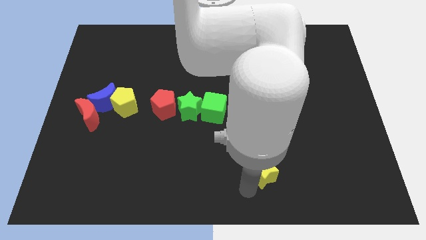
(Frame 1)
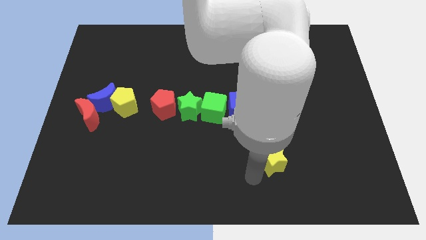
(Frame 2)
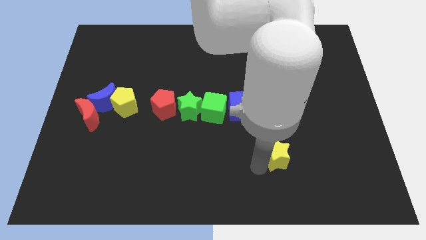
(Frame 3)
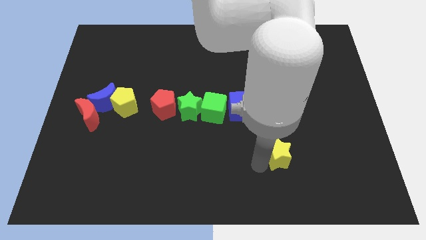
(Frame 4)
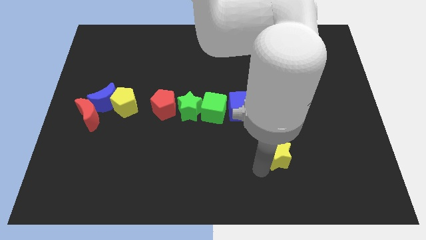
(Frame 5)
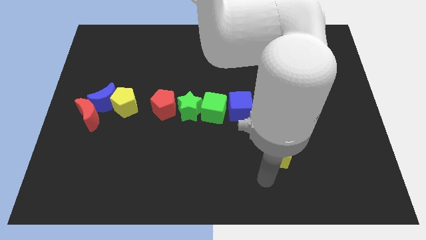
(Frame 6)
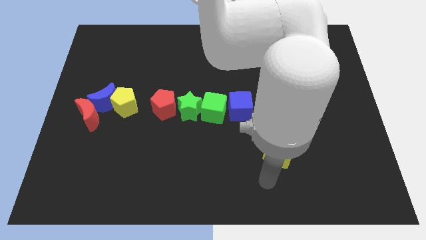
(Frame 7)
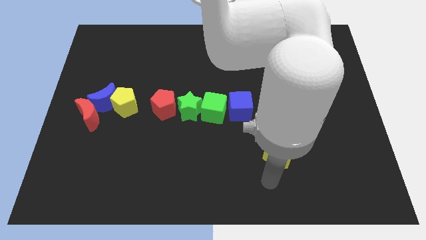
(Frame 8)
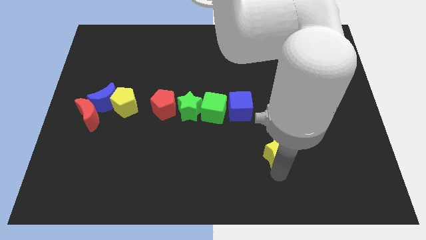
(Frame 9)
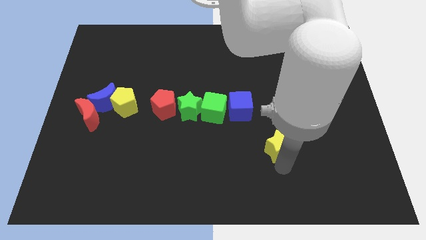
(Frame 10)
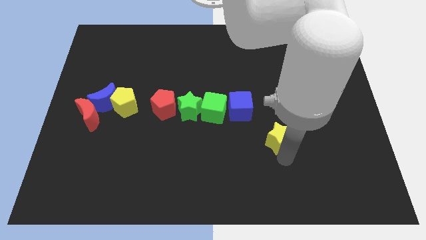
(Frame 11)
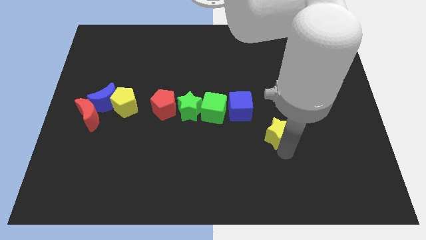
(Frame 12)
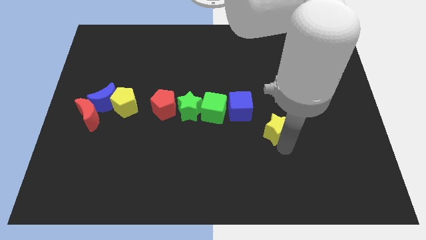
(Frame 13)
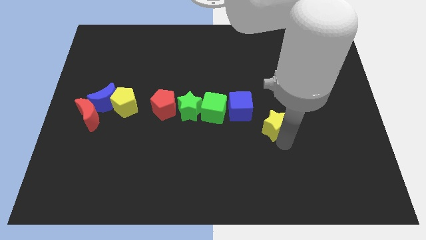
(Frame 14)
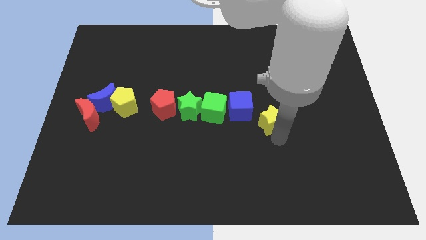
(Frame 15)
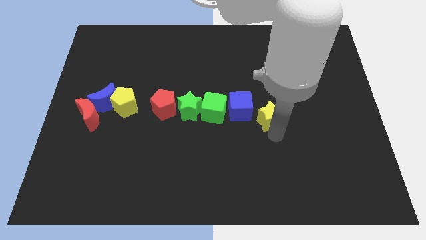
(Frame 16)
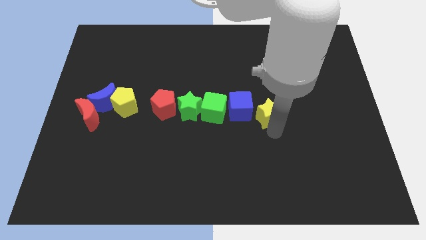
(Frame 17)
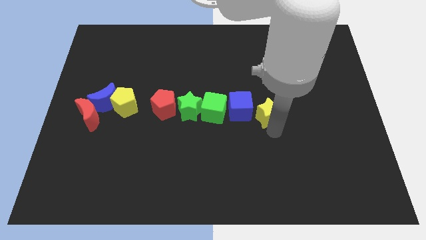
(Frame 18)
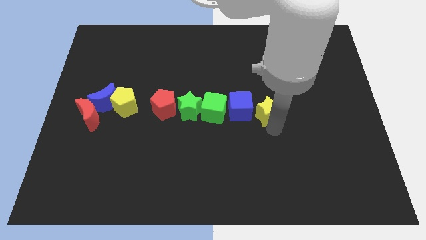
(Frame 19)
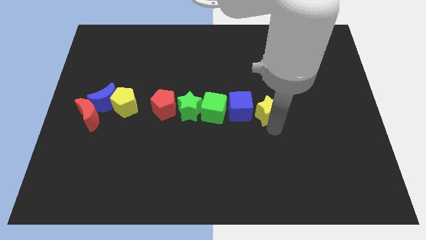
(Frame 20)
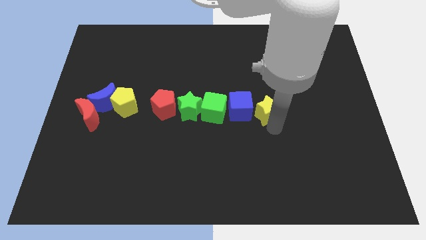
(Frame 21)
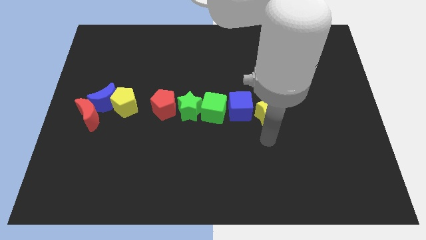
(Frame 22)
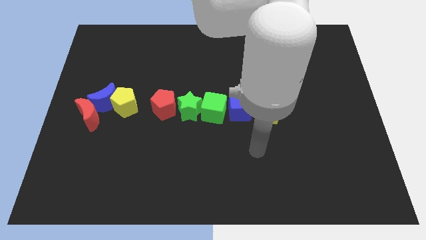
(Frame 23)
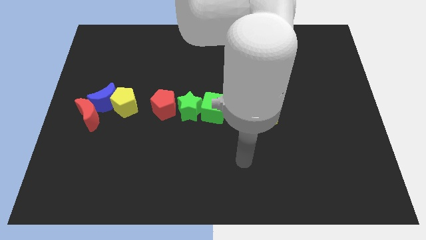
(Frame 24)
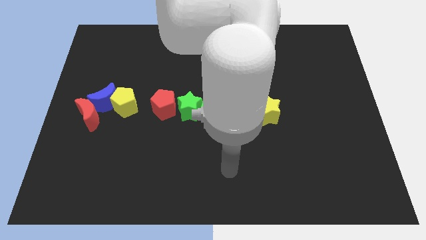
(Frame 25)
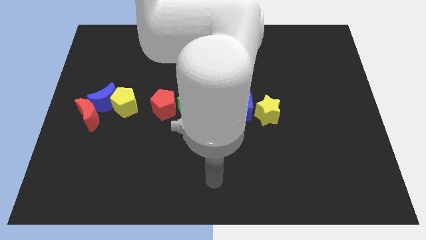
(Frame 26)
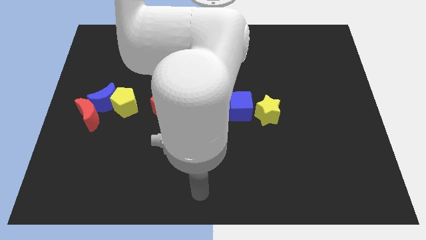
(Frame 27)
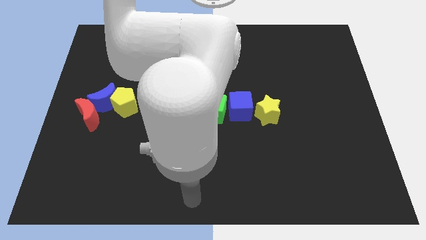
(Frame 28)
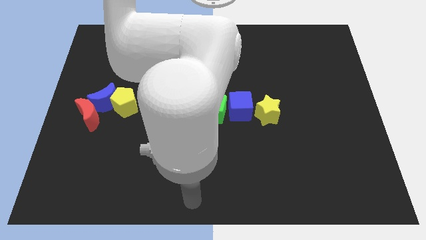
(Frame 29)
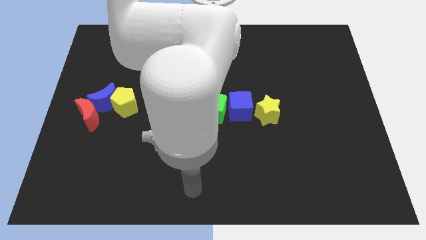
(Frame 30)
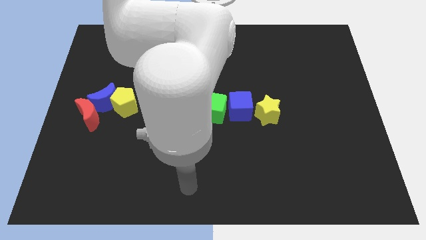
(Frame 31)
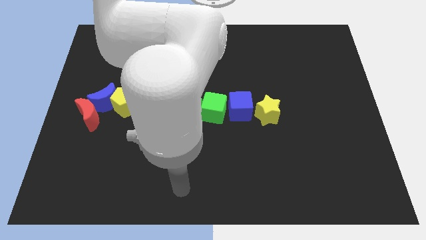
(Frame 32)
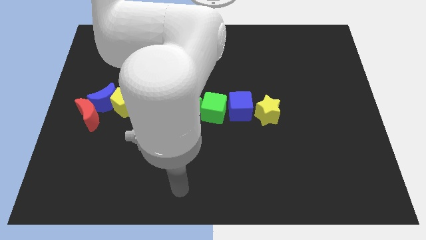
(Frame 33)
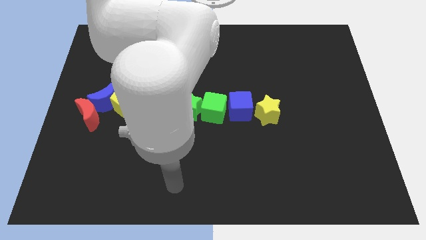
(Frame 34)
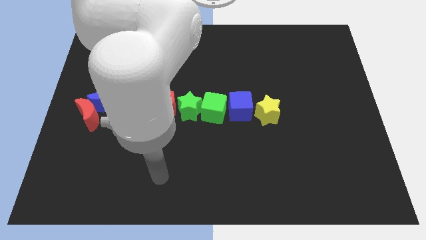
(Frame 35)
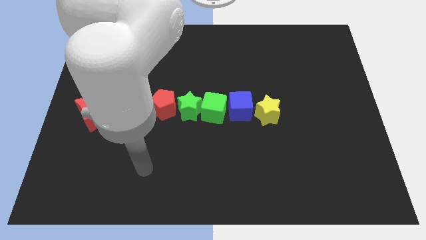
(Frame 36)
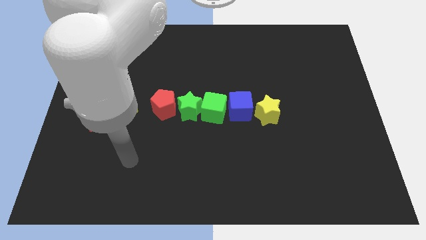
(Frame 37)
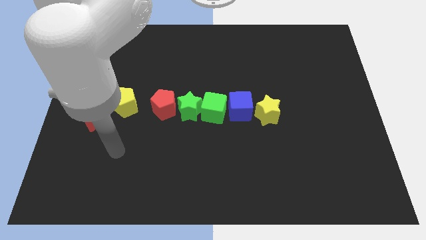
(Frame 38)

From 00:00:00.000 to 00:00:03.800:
place the yellow star to the right of the blue cube

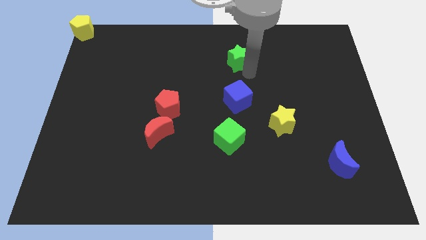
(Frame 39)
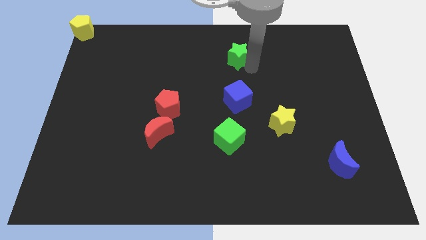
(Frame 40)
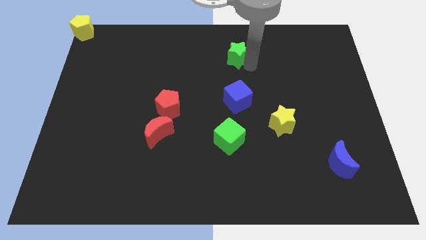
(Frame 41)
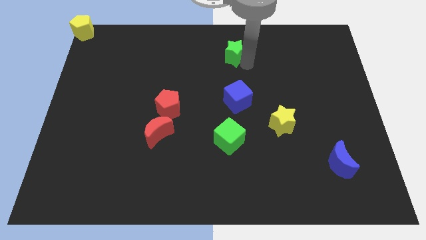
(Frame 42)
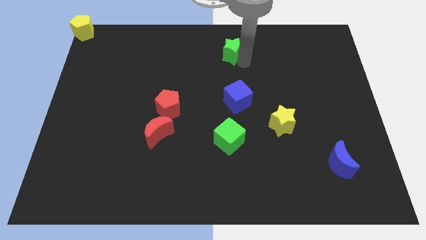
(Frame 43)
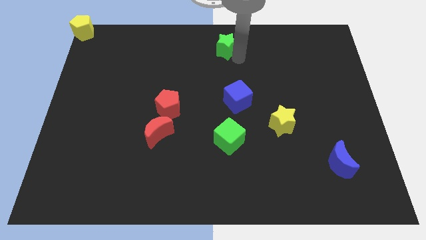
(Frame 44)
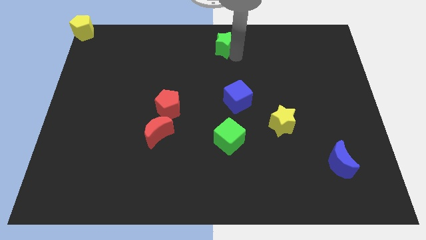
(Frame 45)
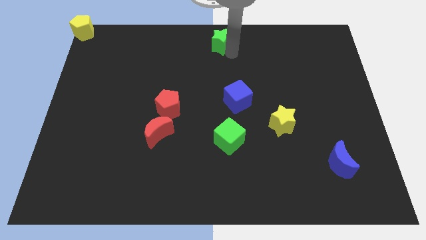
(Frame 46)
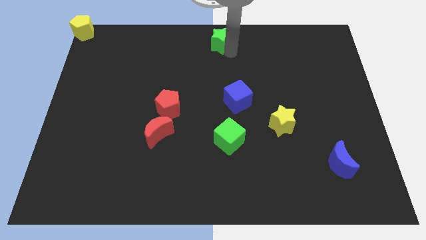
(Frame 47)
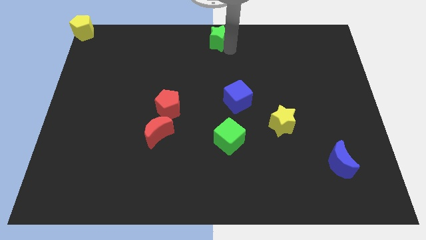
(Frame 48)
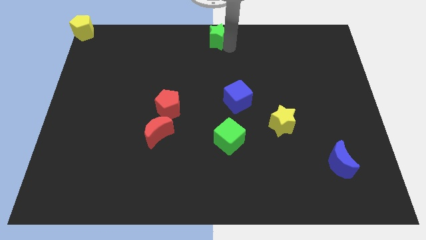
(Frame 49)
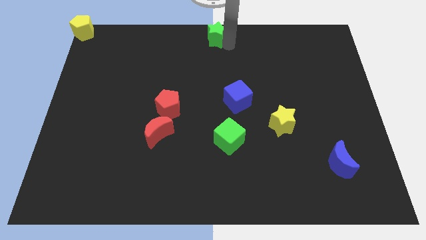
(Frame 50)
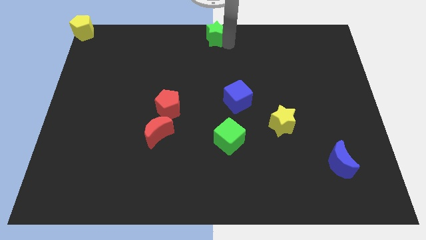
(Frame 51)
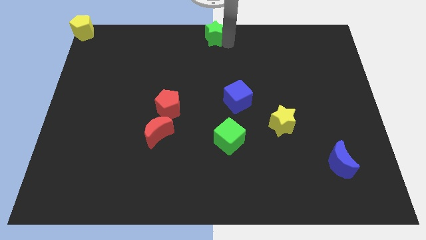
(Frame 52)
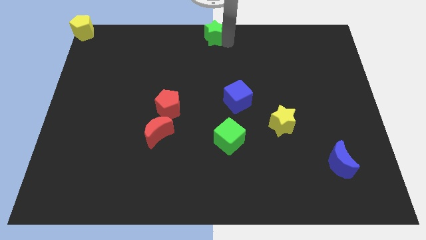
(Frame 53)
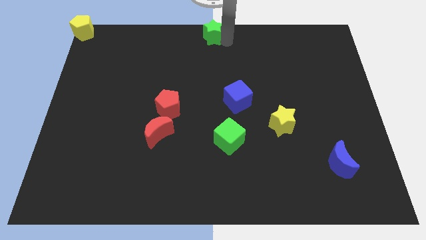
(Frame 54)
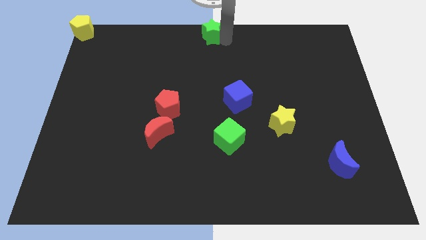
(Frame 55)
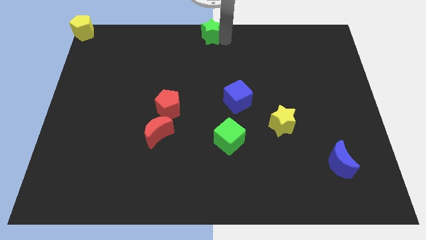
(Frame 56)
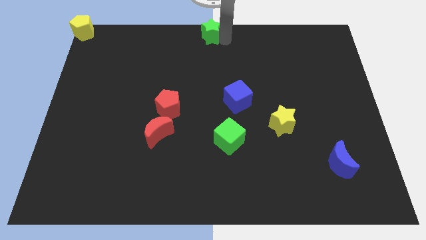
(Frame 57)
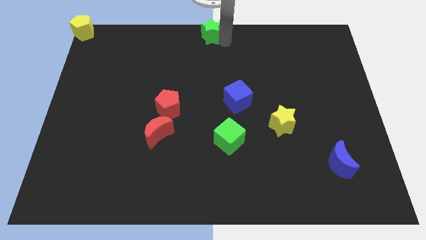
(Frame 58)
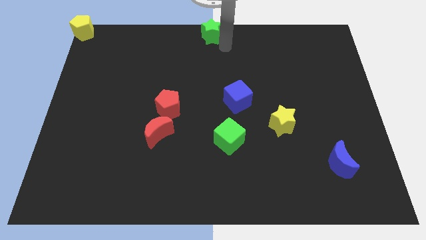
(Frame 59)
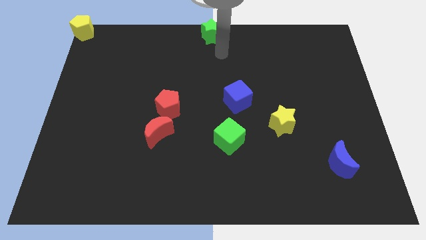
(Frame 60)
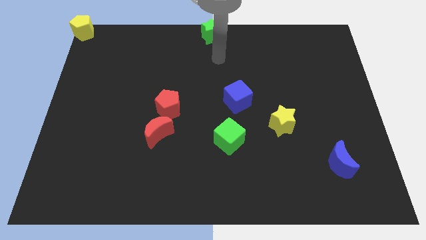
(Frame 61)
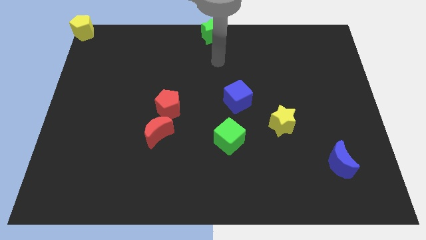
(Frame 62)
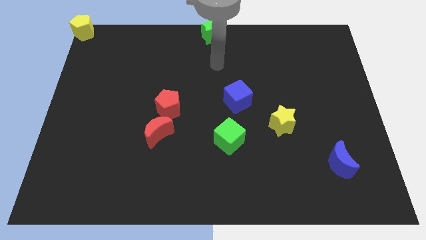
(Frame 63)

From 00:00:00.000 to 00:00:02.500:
move the green star to the top center of the board

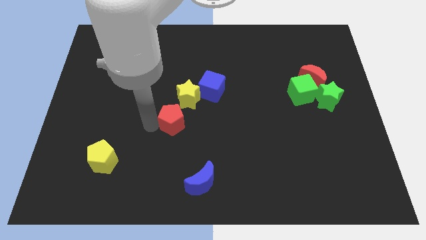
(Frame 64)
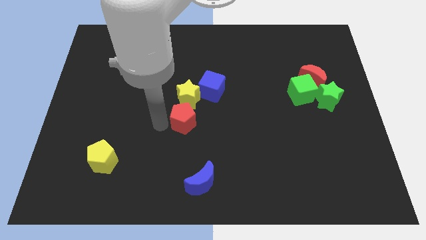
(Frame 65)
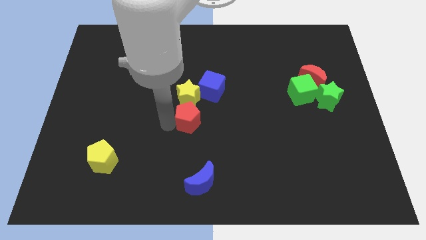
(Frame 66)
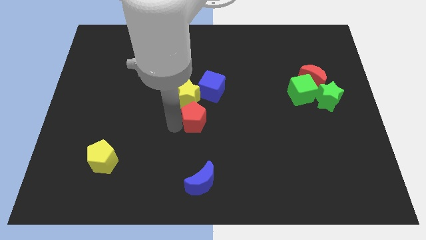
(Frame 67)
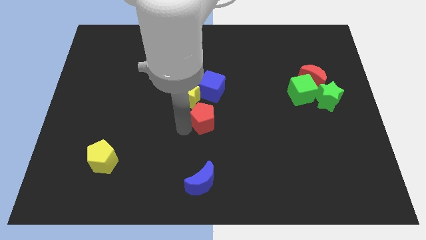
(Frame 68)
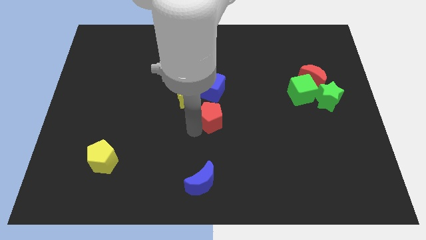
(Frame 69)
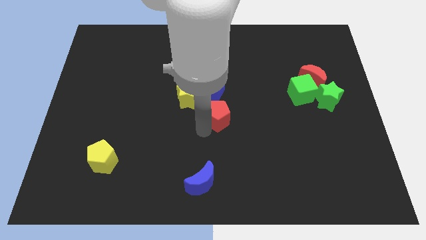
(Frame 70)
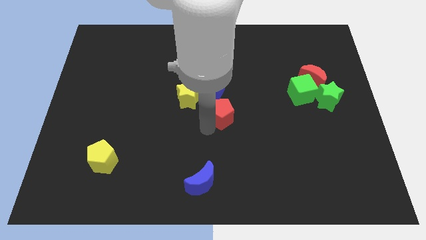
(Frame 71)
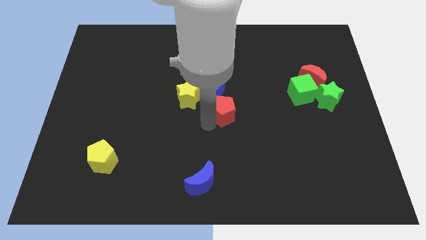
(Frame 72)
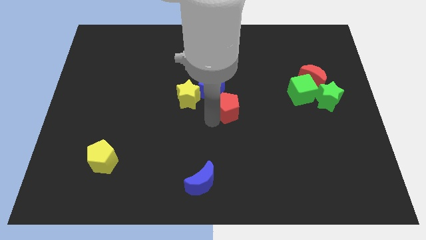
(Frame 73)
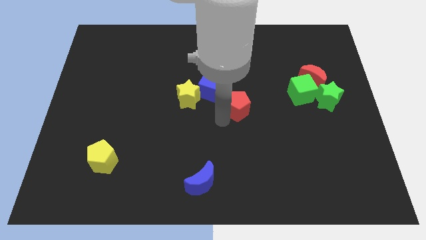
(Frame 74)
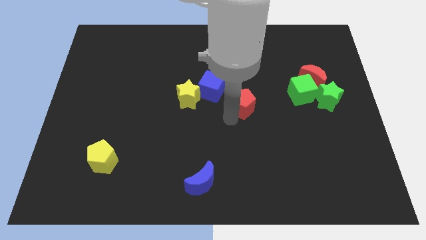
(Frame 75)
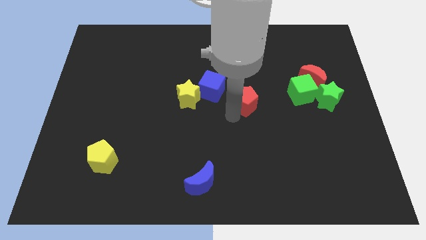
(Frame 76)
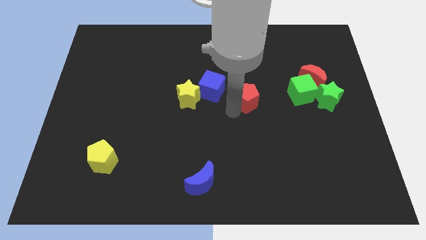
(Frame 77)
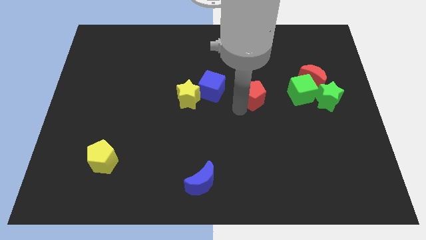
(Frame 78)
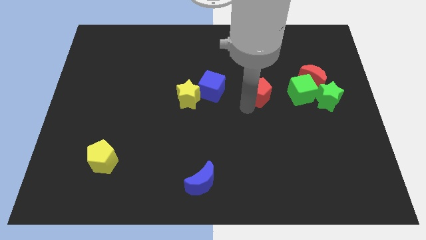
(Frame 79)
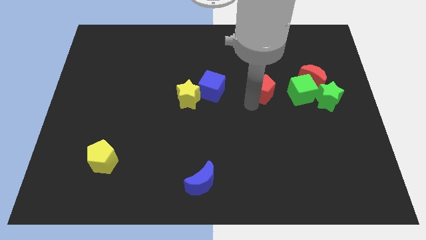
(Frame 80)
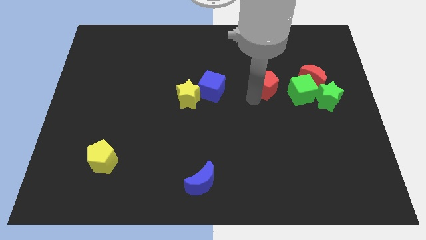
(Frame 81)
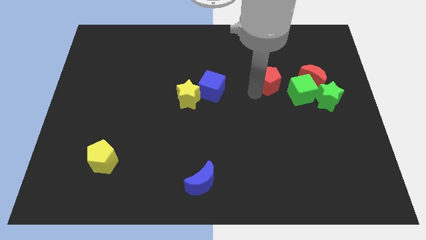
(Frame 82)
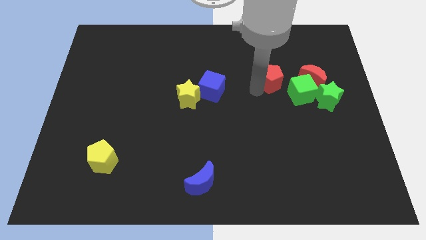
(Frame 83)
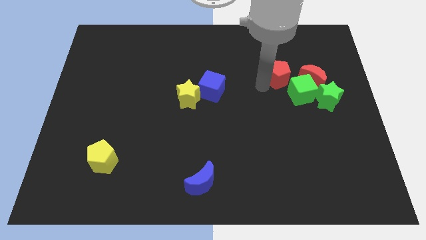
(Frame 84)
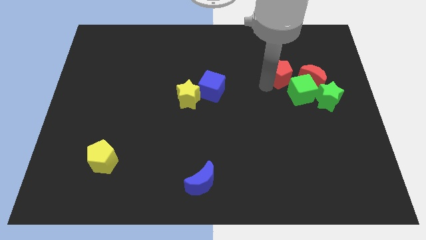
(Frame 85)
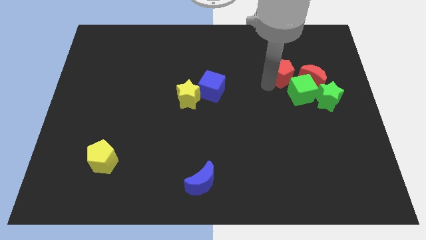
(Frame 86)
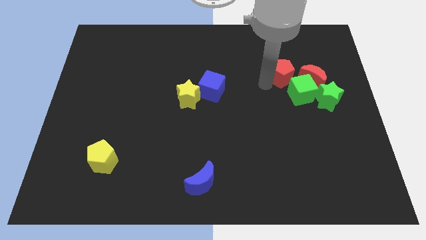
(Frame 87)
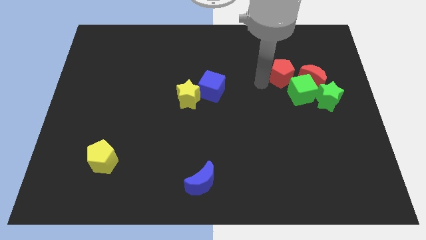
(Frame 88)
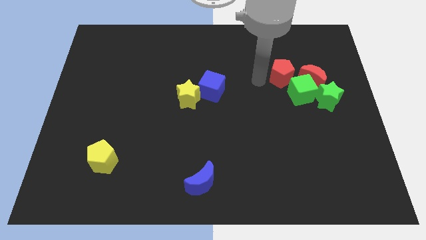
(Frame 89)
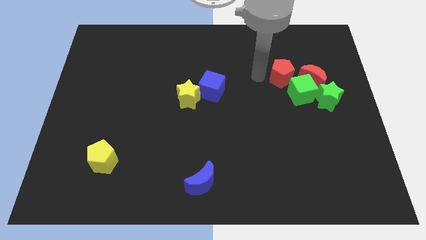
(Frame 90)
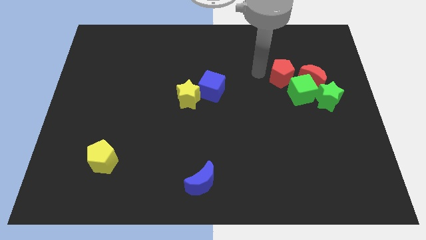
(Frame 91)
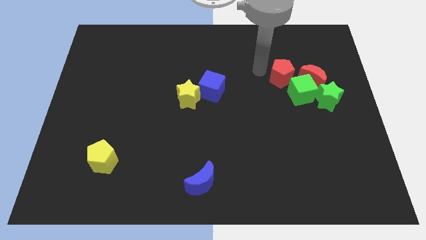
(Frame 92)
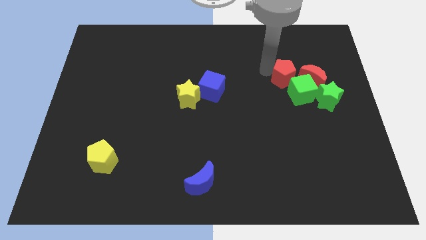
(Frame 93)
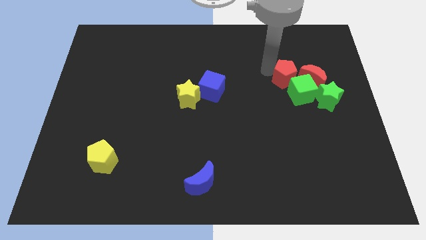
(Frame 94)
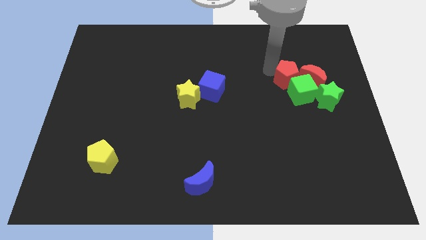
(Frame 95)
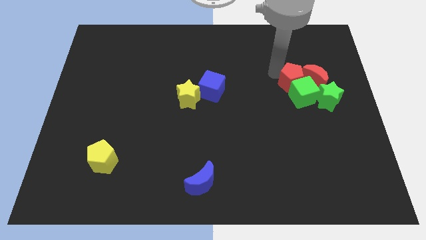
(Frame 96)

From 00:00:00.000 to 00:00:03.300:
push the red pentagon into the red moon and green cube
